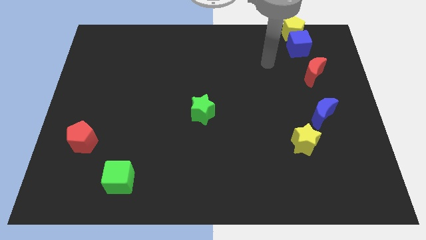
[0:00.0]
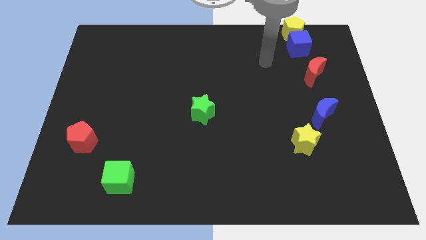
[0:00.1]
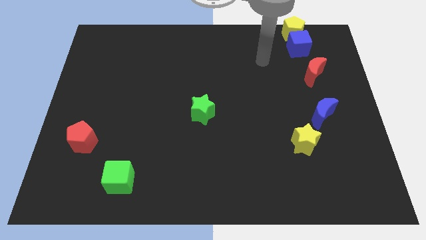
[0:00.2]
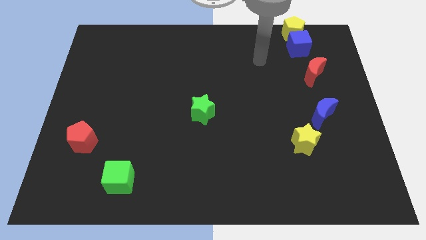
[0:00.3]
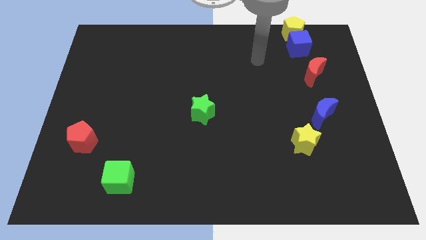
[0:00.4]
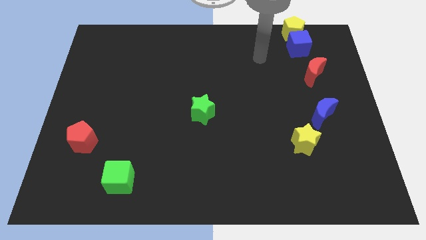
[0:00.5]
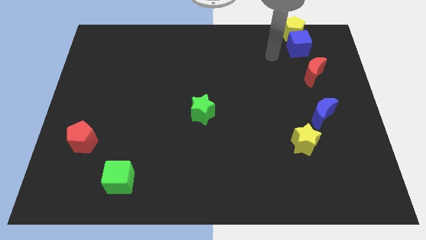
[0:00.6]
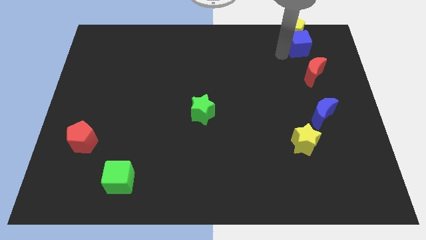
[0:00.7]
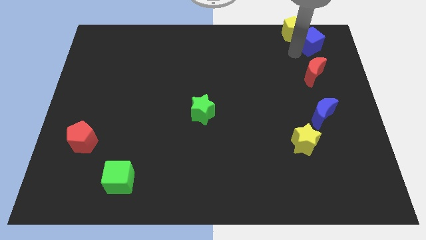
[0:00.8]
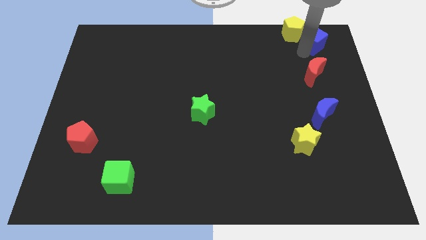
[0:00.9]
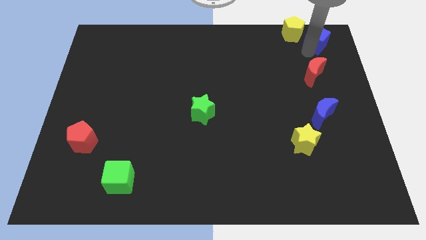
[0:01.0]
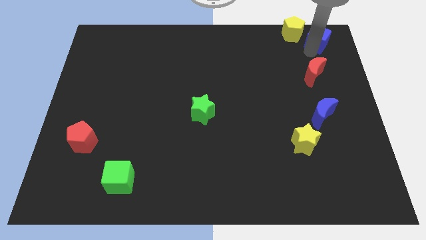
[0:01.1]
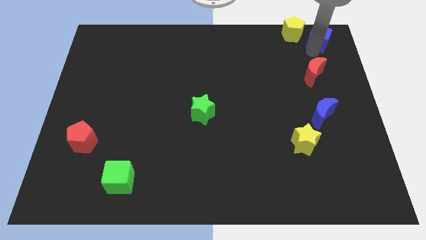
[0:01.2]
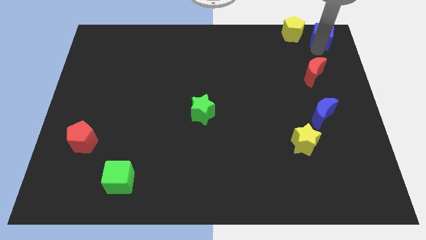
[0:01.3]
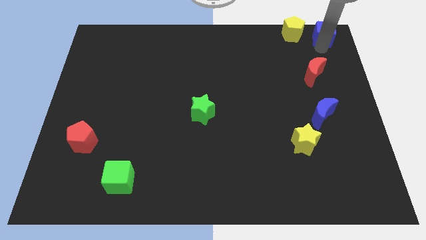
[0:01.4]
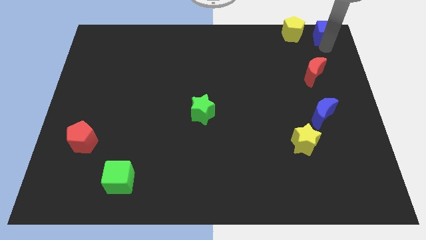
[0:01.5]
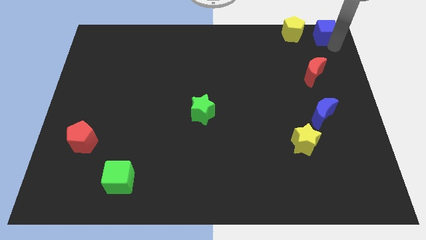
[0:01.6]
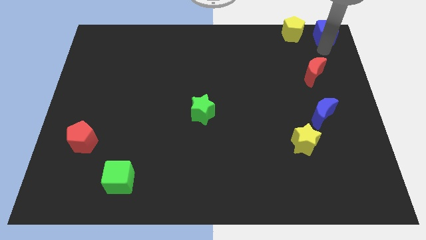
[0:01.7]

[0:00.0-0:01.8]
push the blue cube to the top right corner

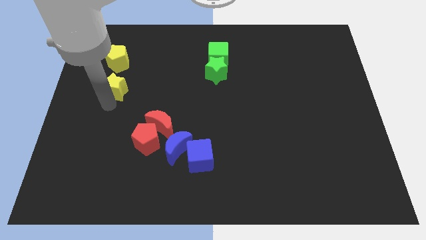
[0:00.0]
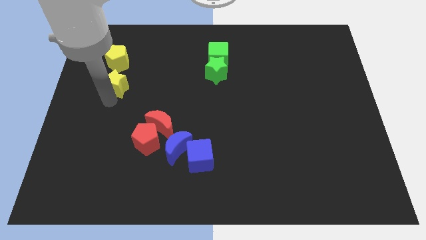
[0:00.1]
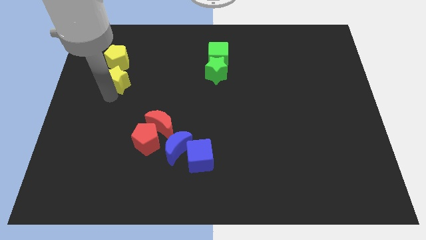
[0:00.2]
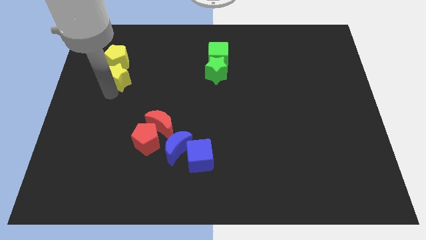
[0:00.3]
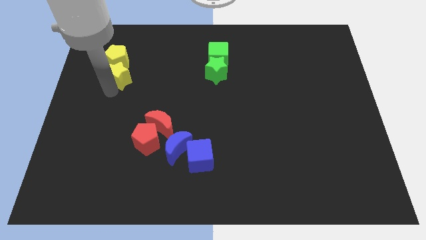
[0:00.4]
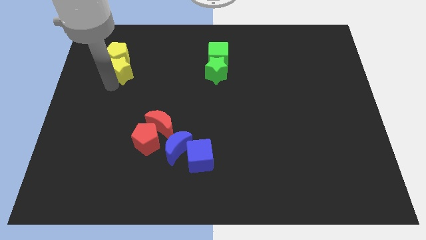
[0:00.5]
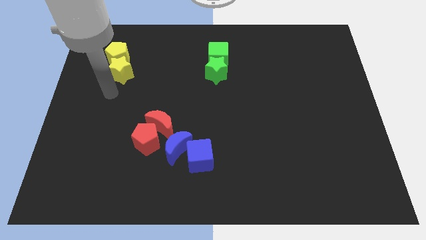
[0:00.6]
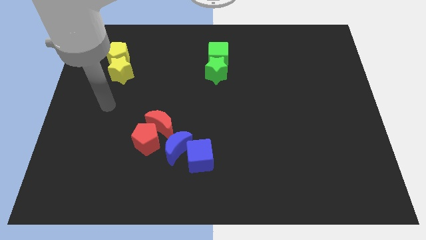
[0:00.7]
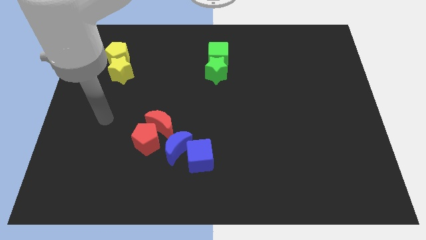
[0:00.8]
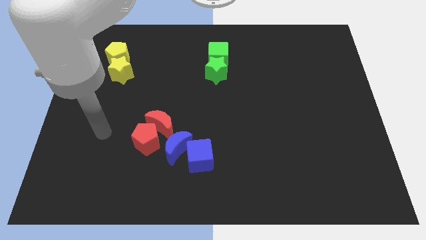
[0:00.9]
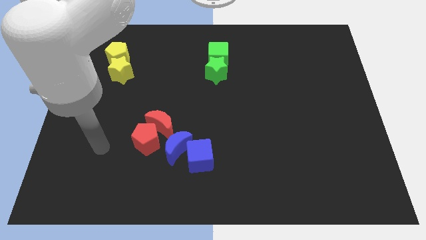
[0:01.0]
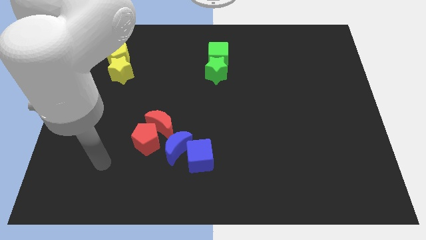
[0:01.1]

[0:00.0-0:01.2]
push the yellow star into the yellow pentagon

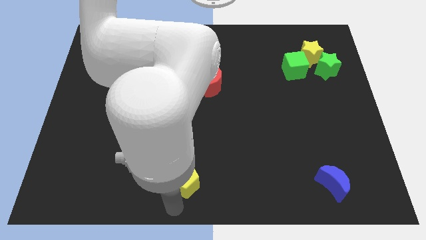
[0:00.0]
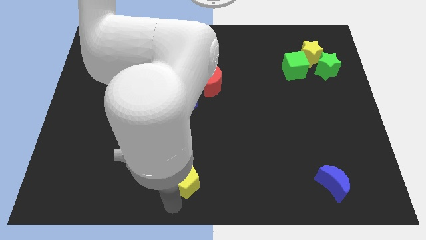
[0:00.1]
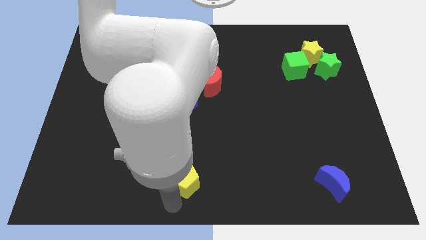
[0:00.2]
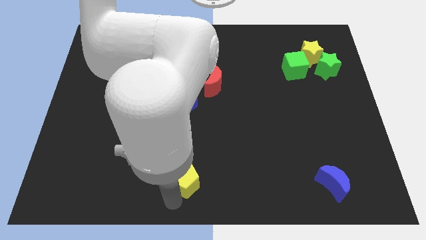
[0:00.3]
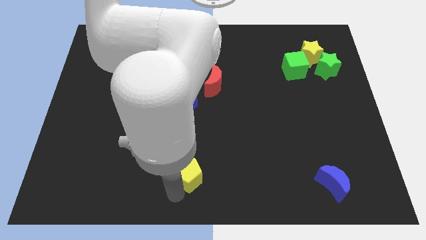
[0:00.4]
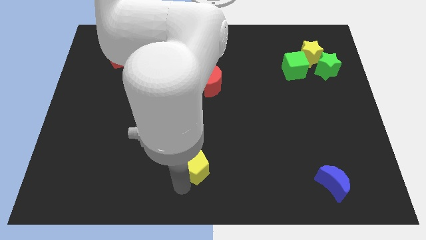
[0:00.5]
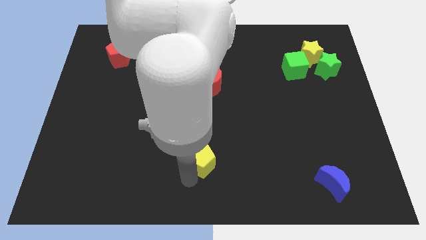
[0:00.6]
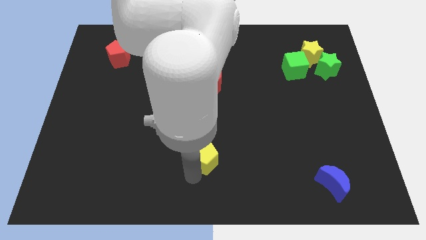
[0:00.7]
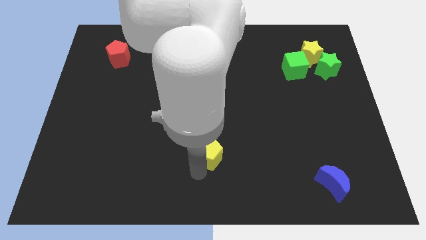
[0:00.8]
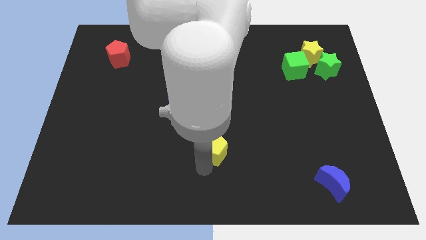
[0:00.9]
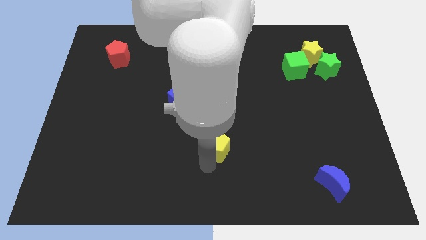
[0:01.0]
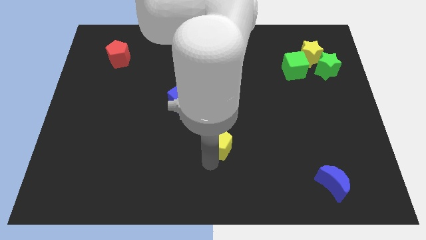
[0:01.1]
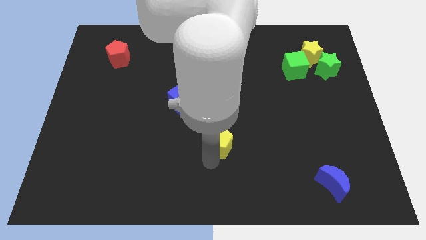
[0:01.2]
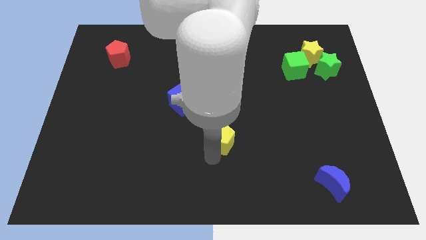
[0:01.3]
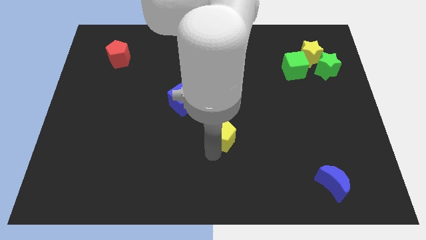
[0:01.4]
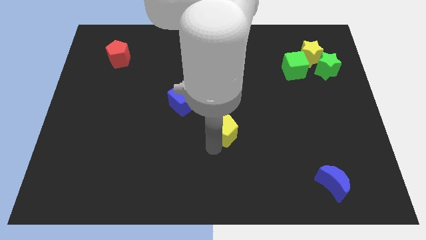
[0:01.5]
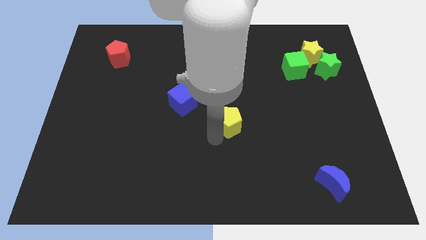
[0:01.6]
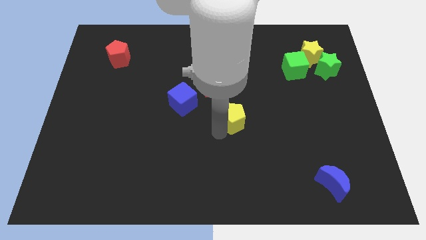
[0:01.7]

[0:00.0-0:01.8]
drag the yellow pentagon towards the top

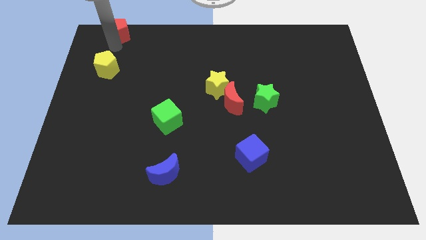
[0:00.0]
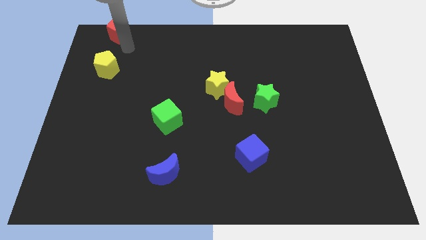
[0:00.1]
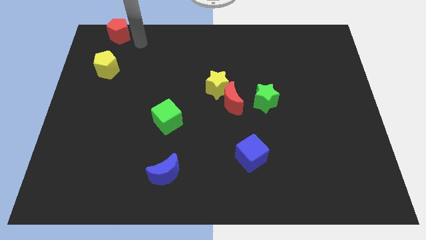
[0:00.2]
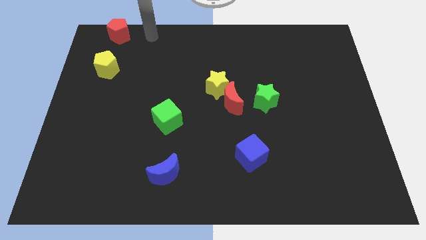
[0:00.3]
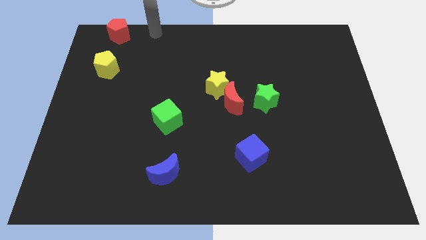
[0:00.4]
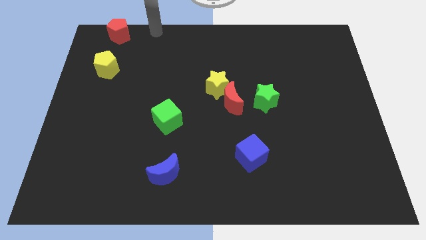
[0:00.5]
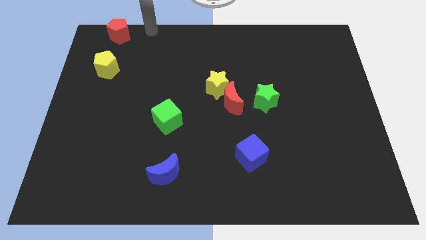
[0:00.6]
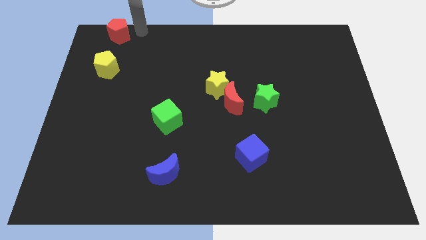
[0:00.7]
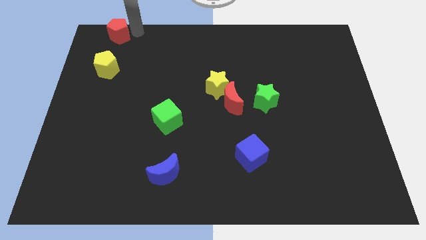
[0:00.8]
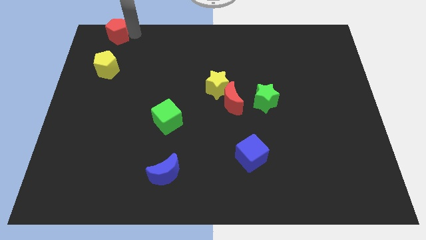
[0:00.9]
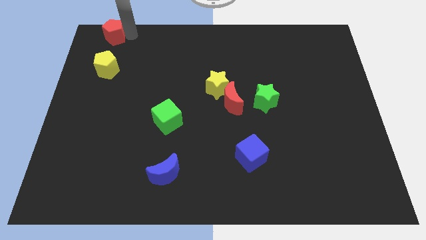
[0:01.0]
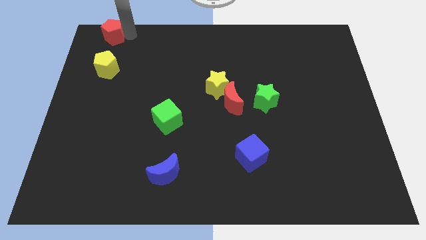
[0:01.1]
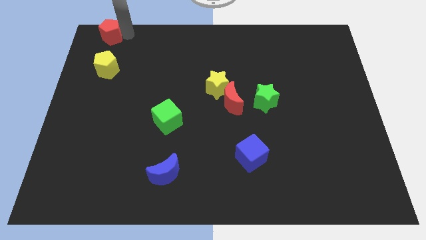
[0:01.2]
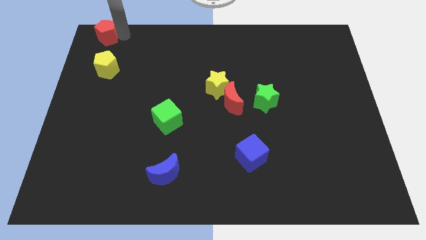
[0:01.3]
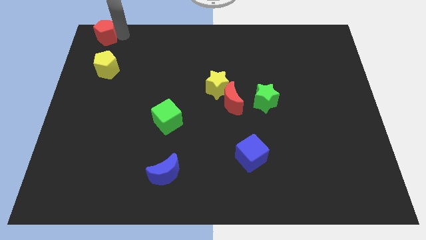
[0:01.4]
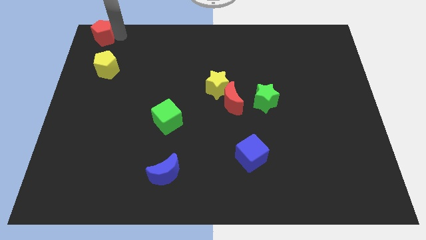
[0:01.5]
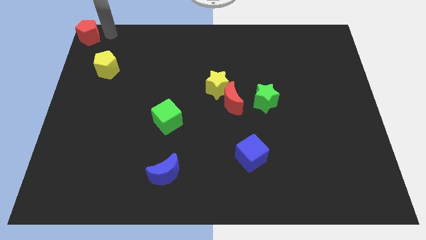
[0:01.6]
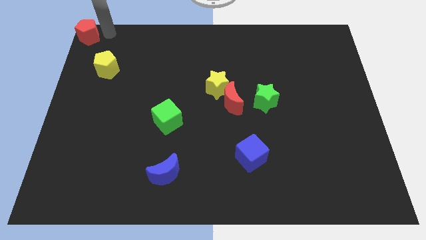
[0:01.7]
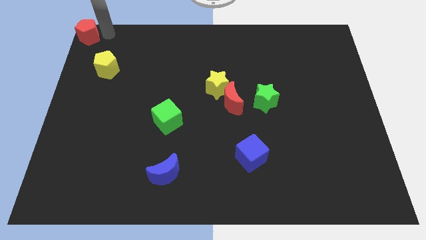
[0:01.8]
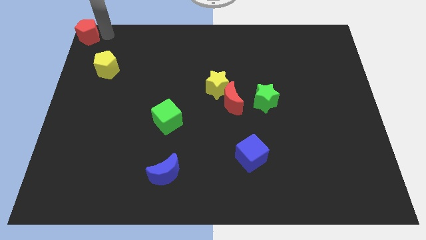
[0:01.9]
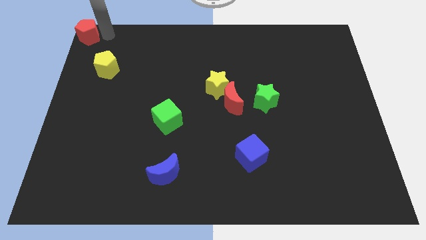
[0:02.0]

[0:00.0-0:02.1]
push red pentagon to the top left corner

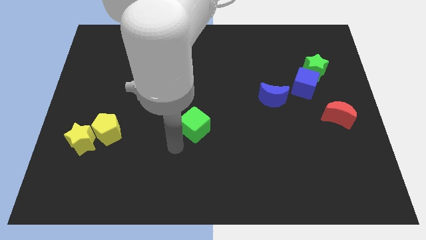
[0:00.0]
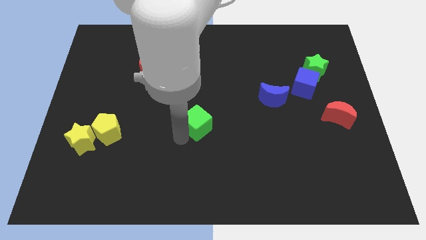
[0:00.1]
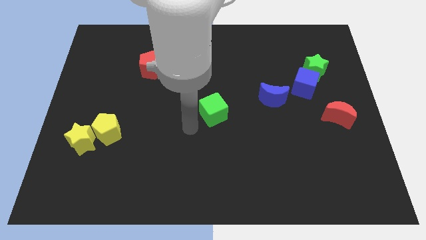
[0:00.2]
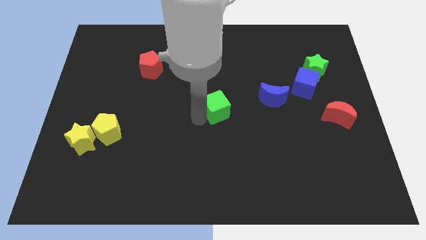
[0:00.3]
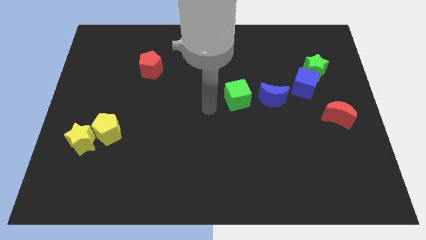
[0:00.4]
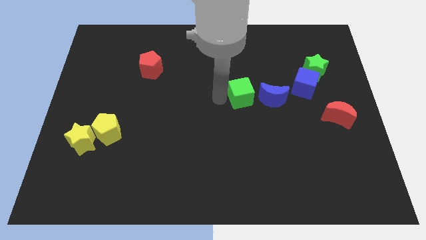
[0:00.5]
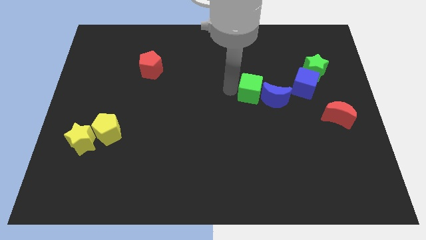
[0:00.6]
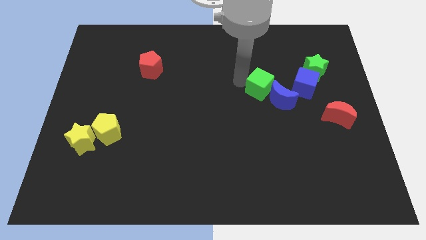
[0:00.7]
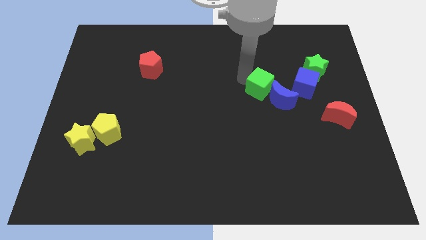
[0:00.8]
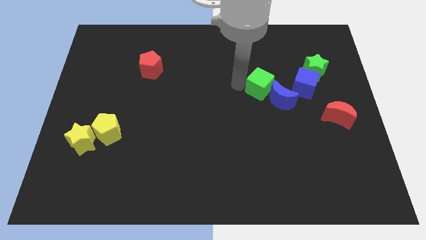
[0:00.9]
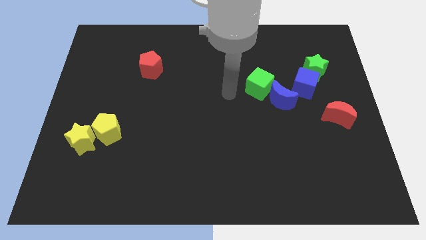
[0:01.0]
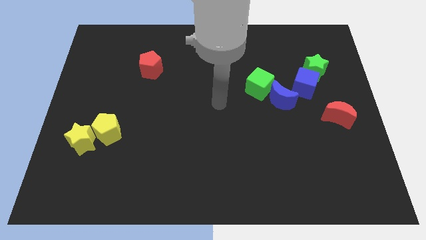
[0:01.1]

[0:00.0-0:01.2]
slide green cube close to blue moon

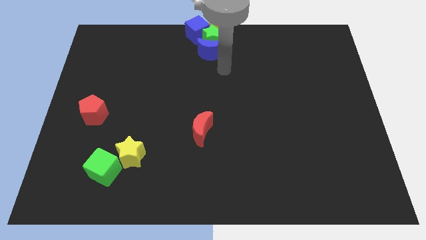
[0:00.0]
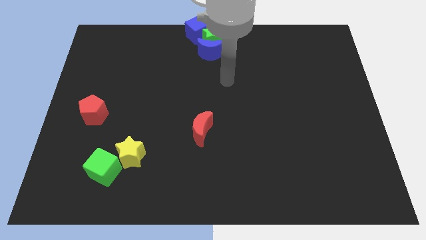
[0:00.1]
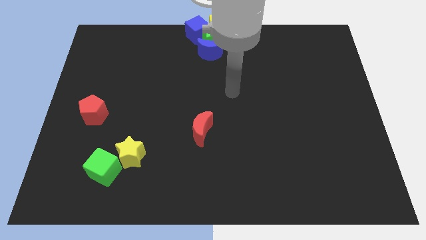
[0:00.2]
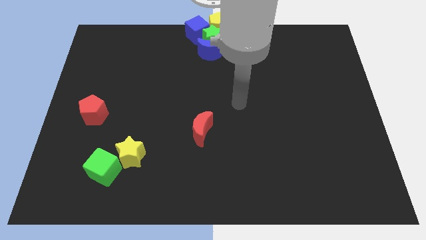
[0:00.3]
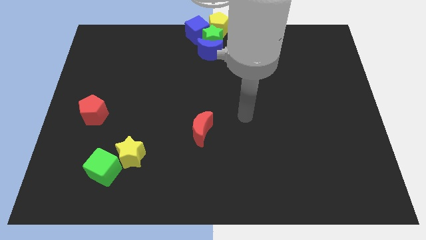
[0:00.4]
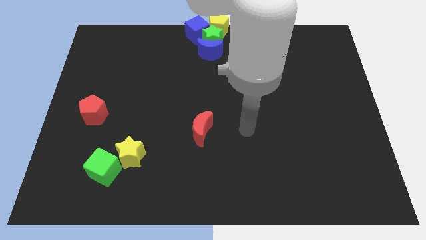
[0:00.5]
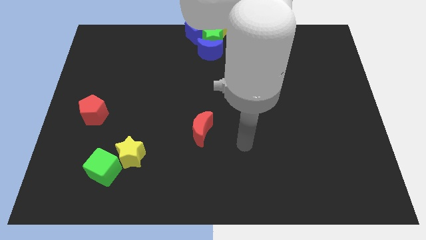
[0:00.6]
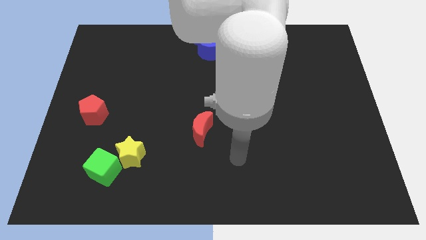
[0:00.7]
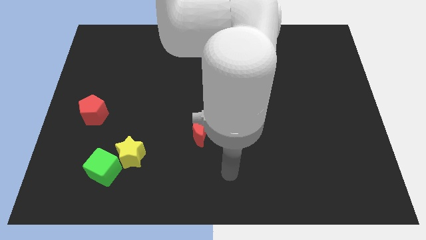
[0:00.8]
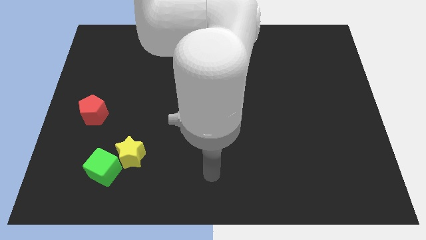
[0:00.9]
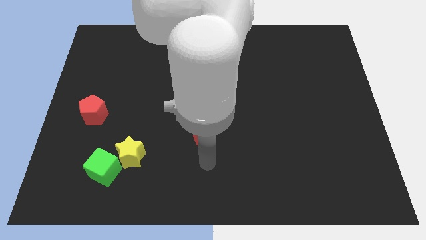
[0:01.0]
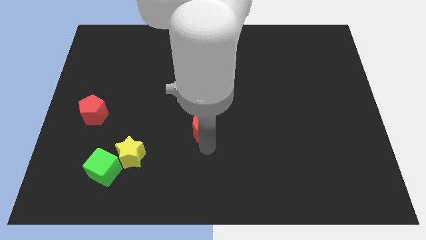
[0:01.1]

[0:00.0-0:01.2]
place your arm to the bottom of red moon
